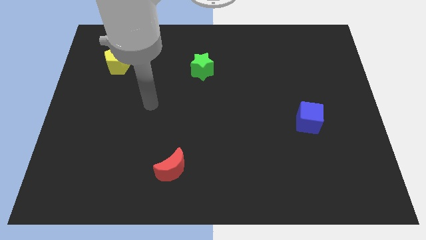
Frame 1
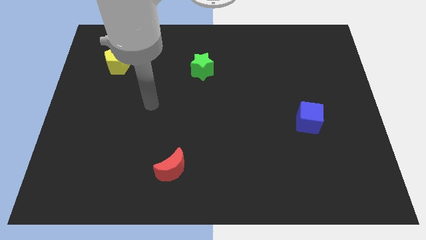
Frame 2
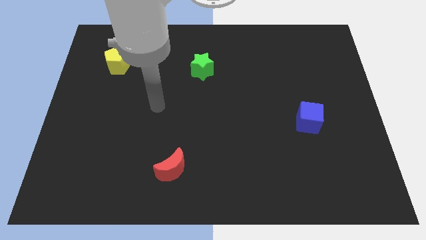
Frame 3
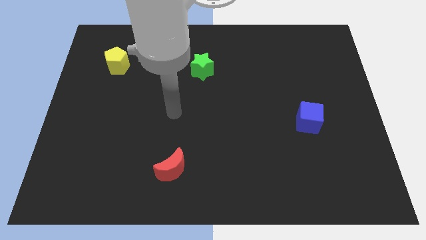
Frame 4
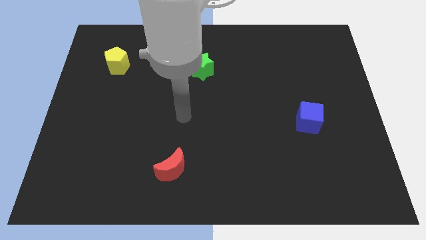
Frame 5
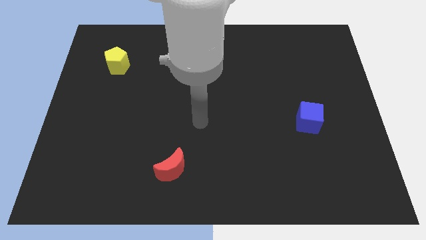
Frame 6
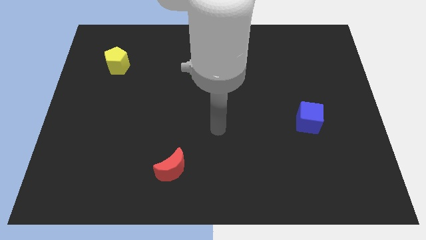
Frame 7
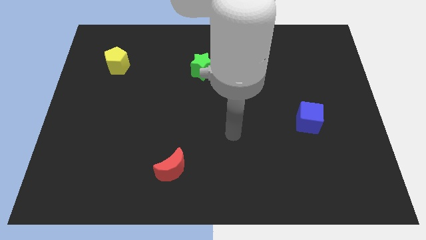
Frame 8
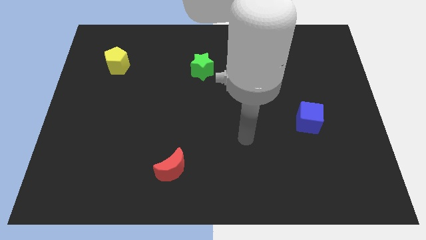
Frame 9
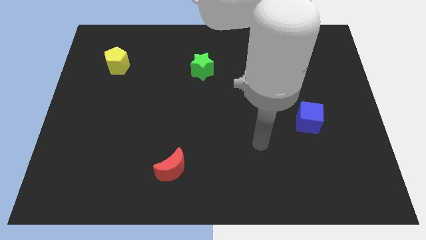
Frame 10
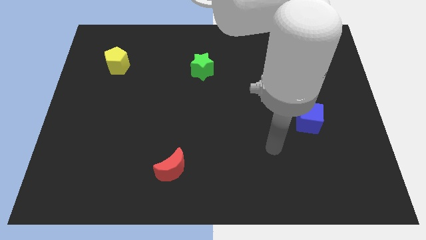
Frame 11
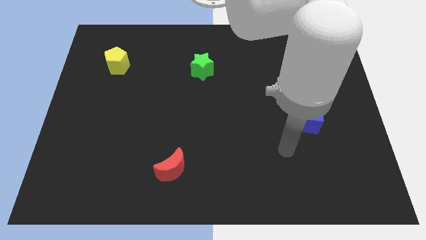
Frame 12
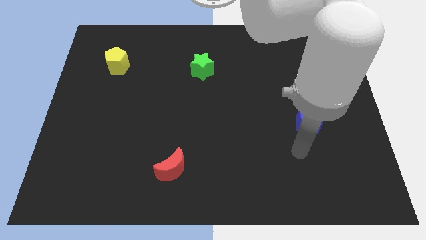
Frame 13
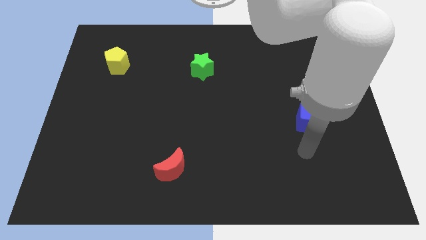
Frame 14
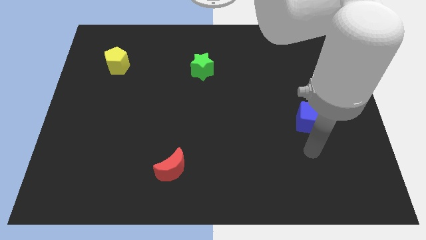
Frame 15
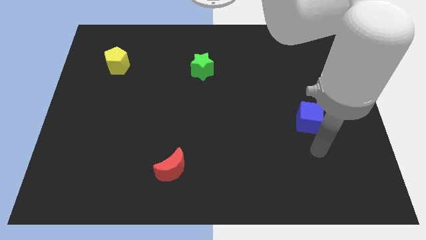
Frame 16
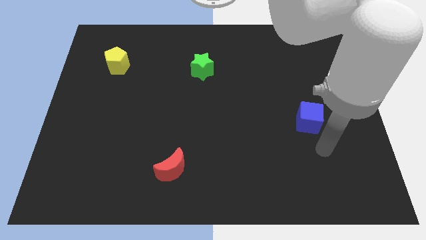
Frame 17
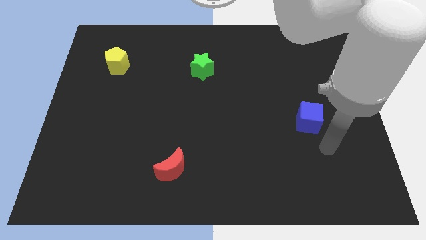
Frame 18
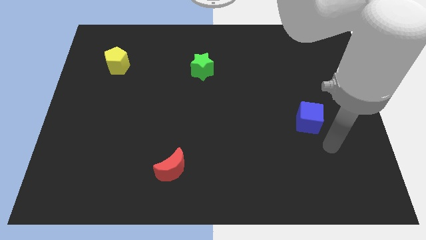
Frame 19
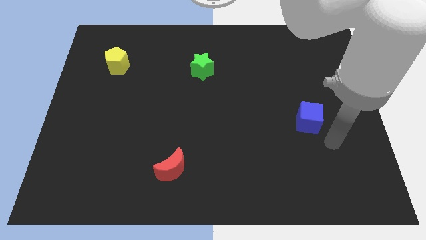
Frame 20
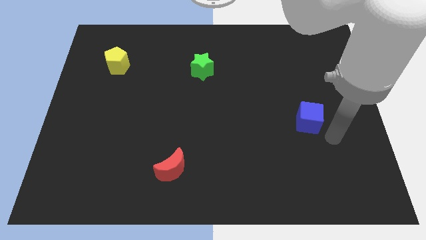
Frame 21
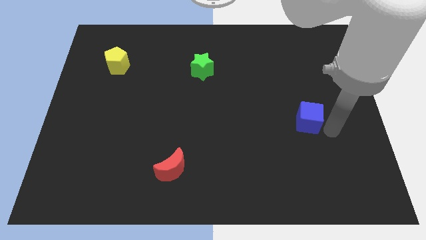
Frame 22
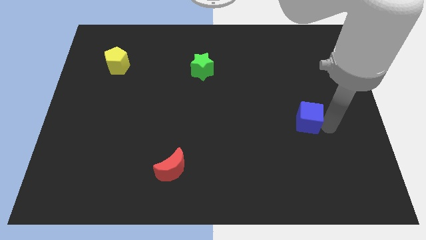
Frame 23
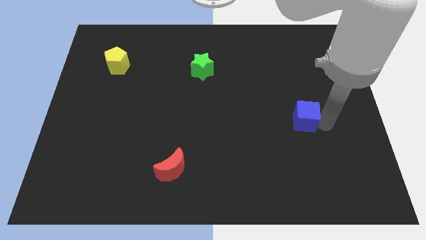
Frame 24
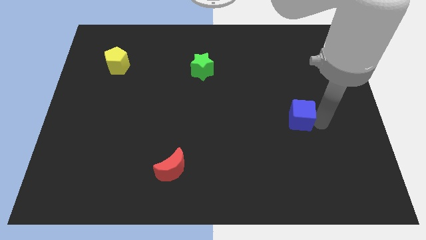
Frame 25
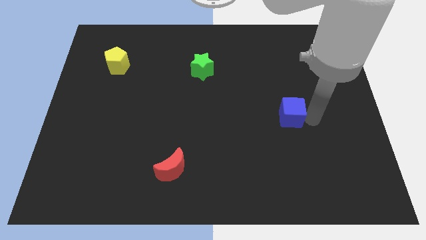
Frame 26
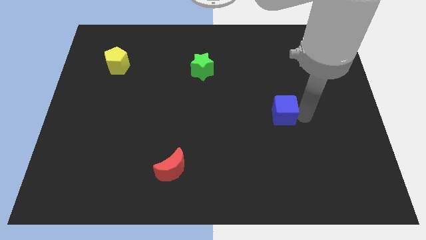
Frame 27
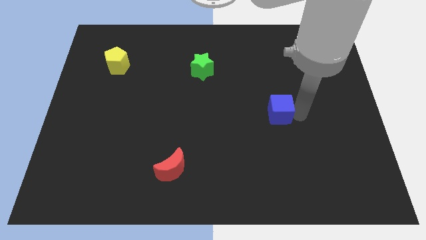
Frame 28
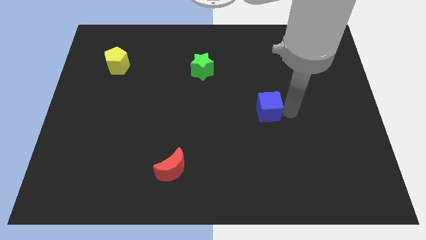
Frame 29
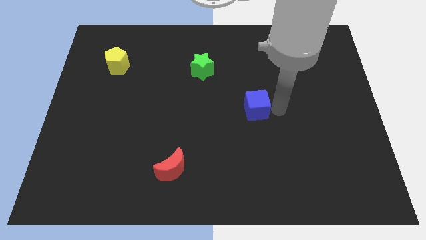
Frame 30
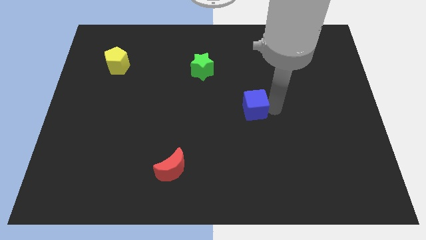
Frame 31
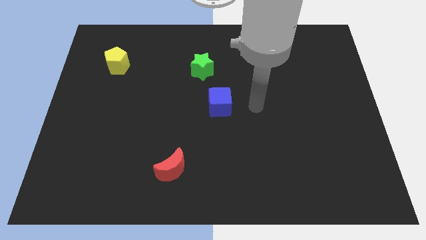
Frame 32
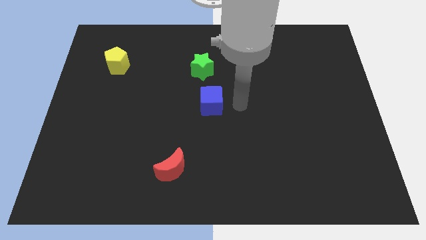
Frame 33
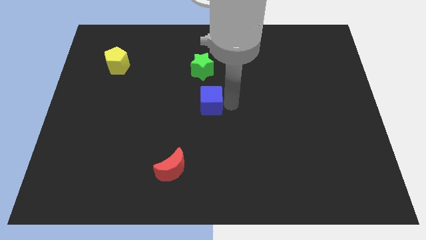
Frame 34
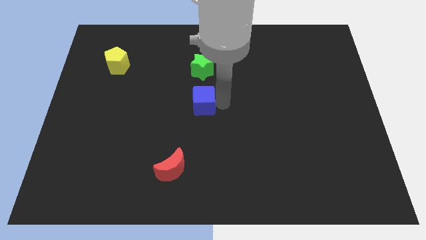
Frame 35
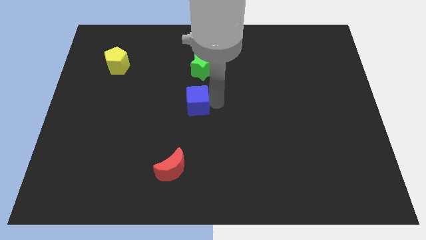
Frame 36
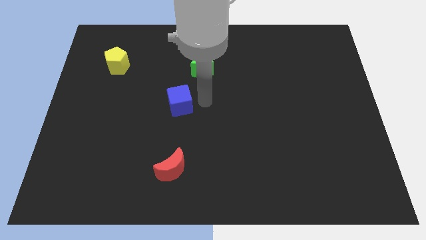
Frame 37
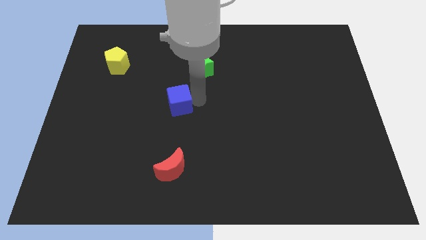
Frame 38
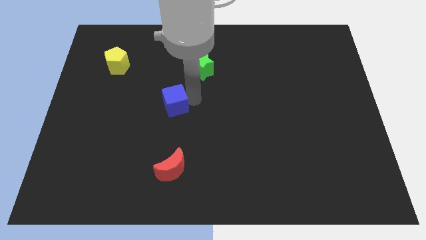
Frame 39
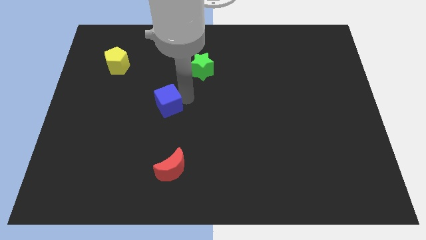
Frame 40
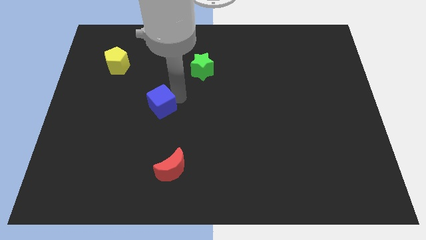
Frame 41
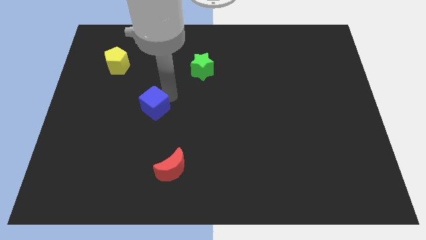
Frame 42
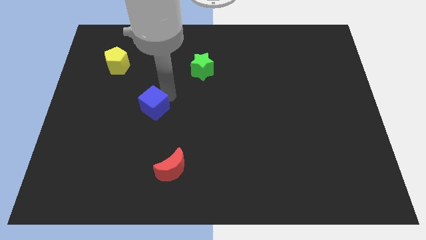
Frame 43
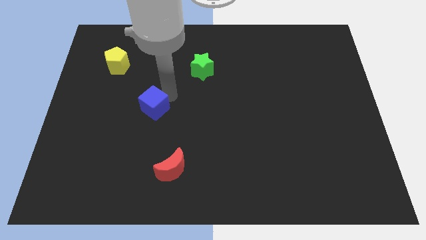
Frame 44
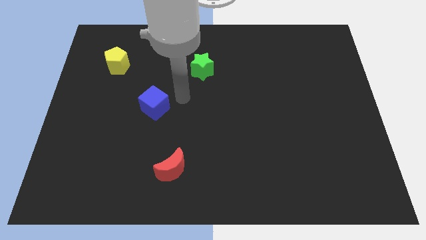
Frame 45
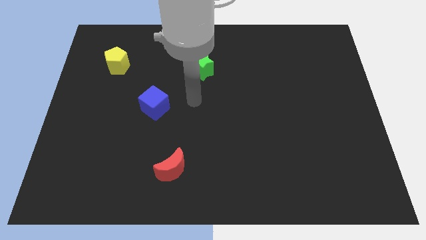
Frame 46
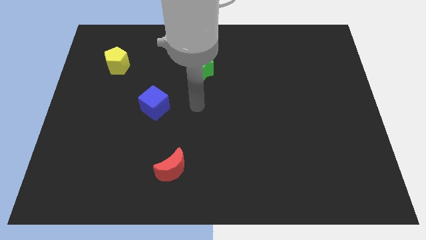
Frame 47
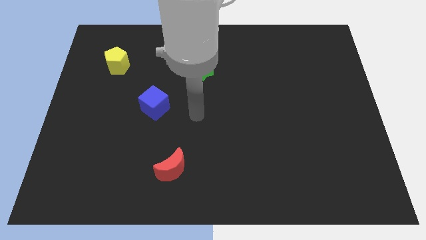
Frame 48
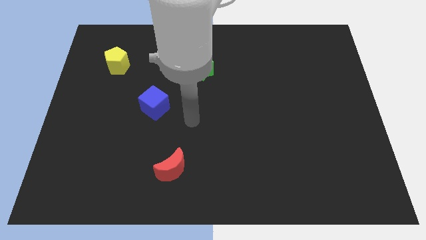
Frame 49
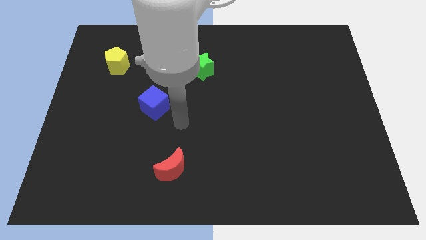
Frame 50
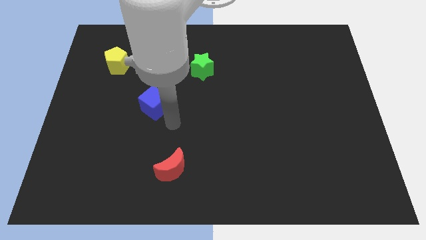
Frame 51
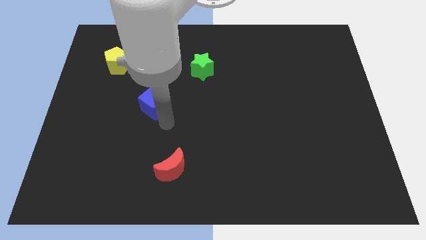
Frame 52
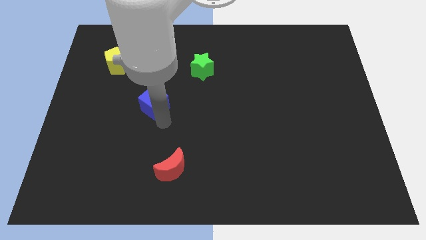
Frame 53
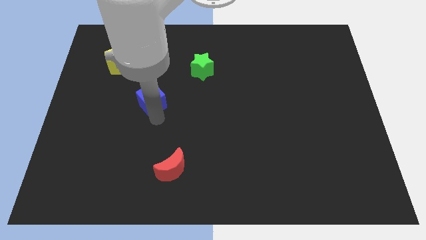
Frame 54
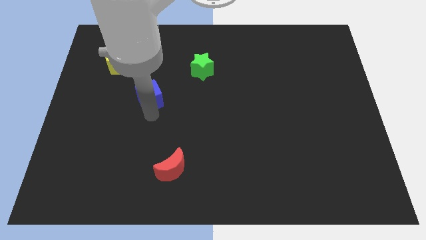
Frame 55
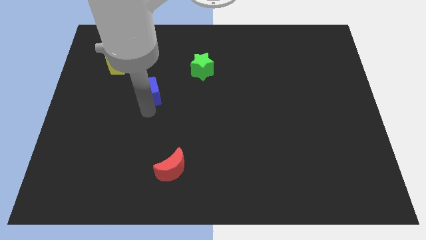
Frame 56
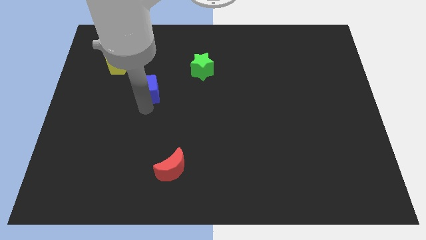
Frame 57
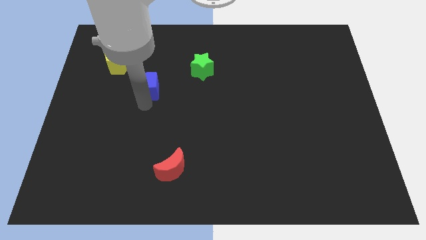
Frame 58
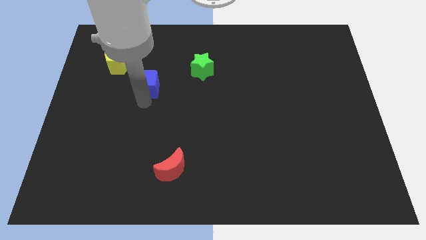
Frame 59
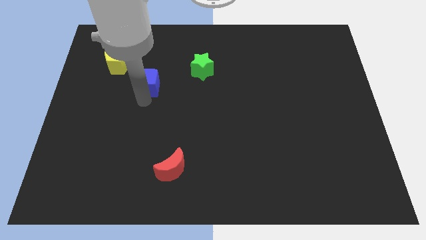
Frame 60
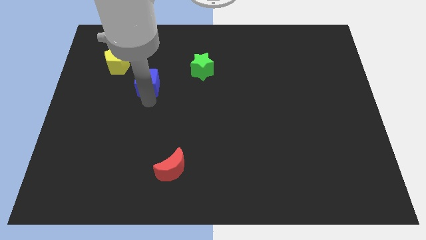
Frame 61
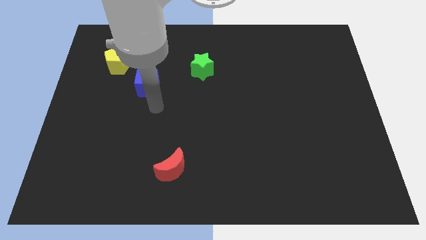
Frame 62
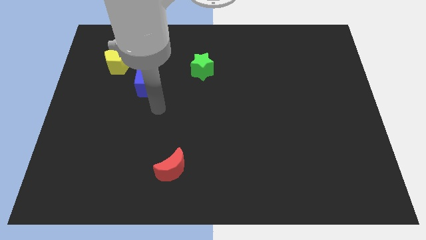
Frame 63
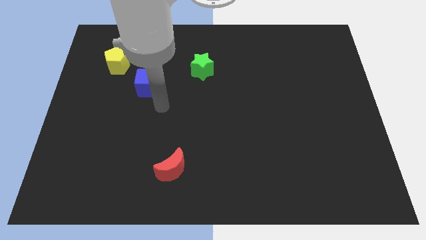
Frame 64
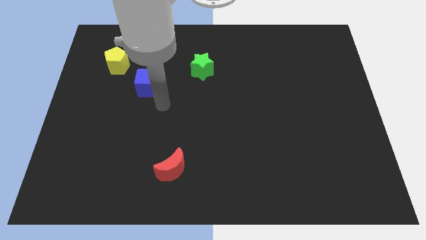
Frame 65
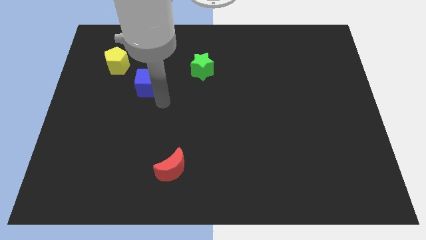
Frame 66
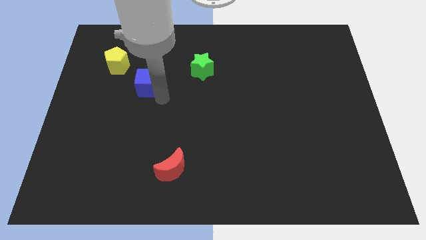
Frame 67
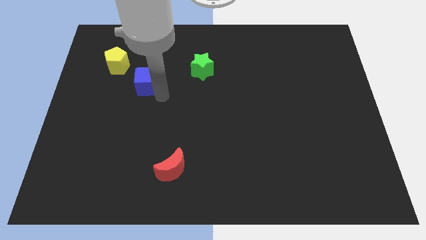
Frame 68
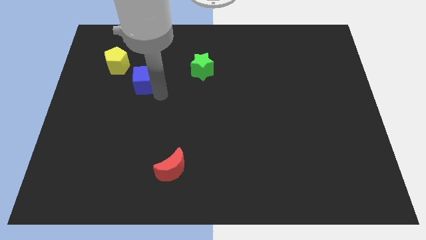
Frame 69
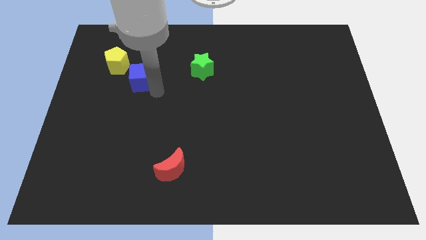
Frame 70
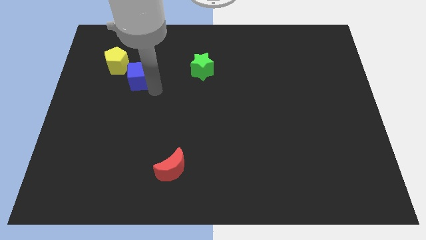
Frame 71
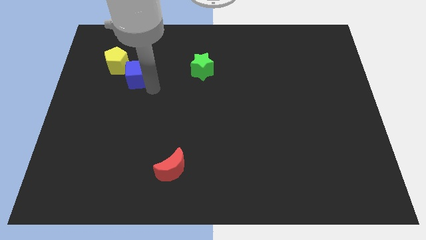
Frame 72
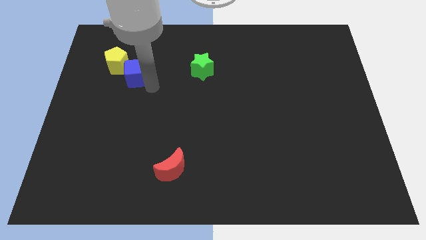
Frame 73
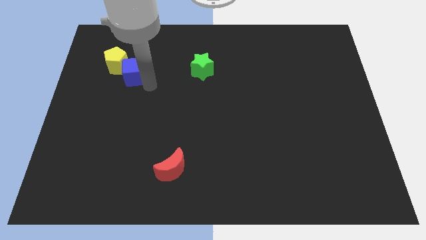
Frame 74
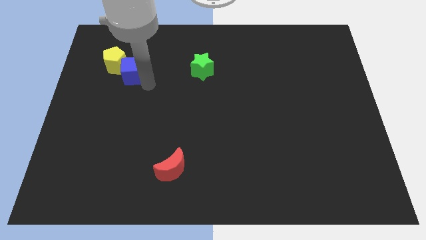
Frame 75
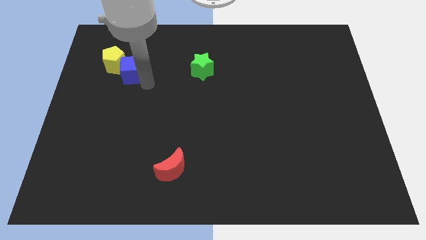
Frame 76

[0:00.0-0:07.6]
put the blue block next to the pentagon

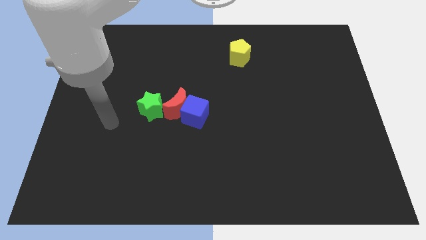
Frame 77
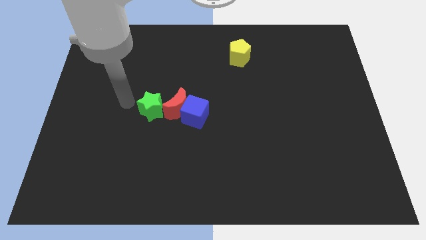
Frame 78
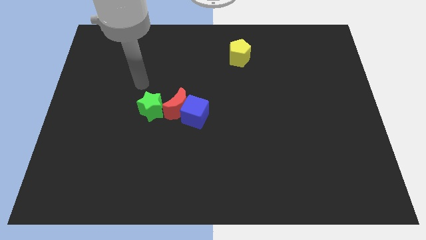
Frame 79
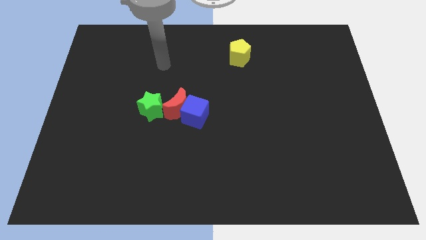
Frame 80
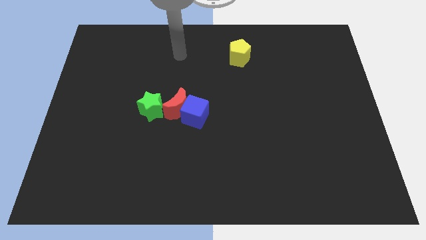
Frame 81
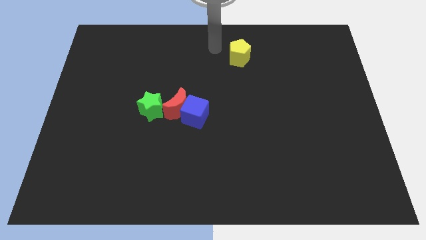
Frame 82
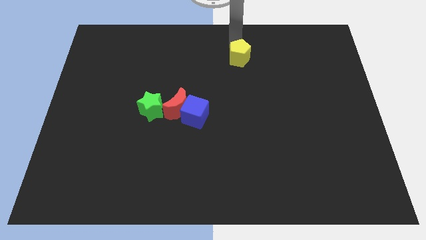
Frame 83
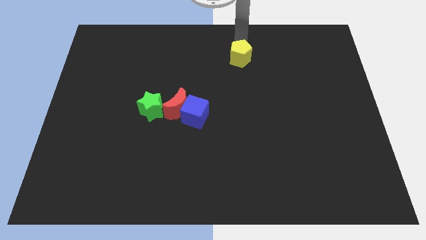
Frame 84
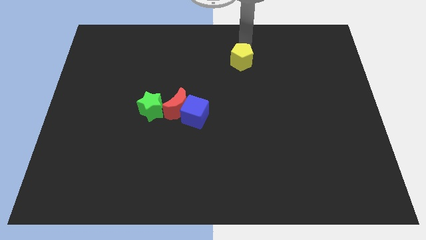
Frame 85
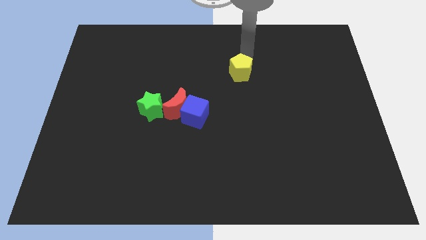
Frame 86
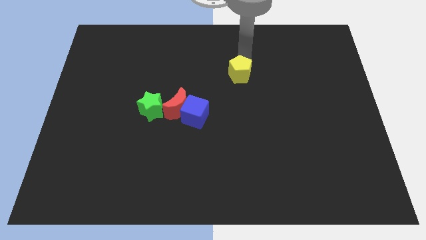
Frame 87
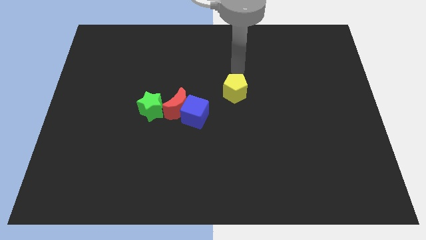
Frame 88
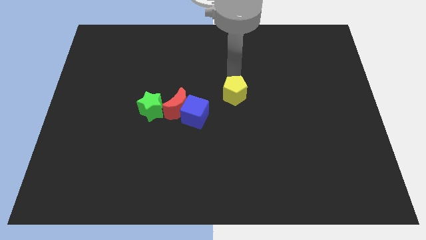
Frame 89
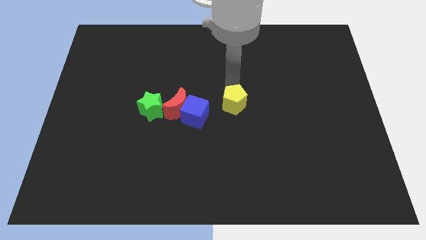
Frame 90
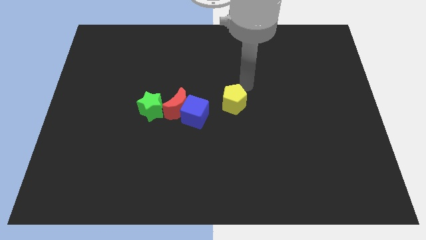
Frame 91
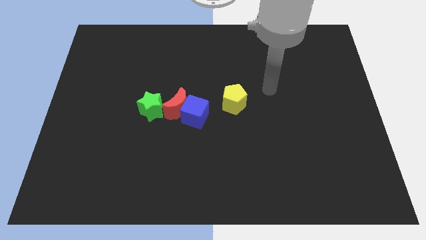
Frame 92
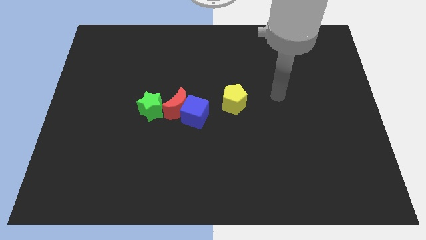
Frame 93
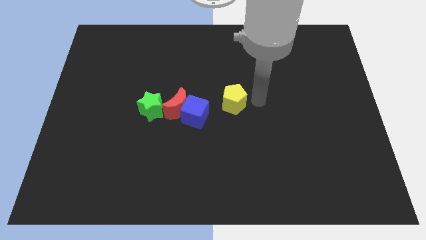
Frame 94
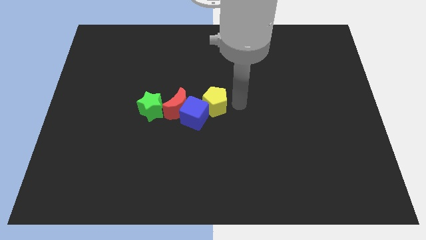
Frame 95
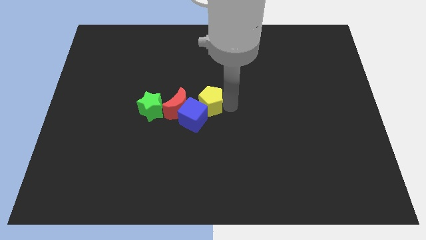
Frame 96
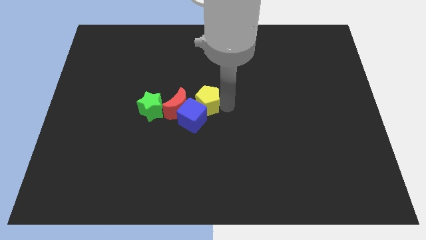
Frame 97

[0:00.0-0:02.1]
push the pentagon next to the blue block
